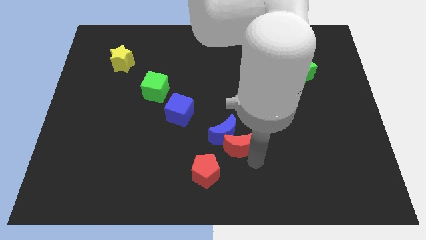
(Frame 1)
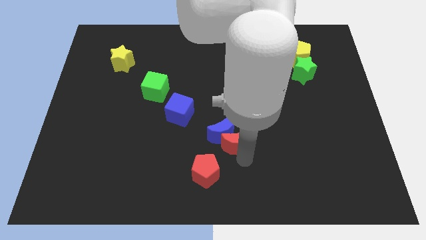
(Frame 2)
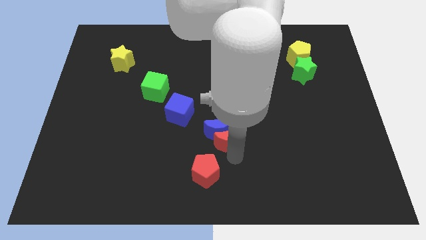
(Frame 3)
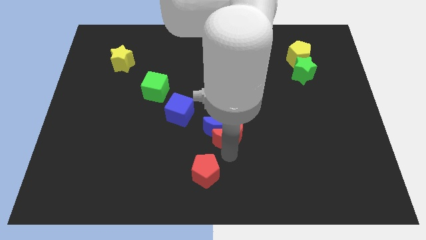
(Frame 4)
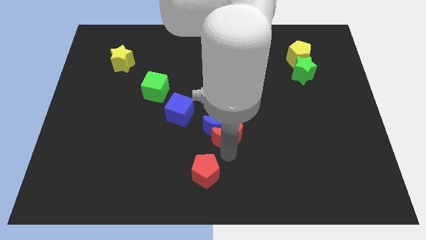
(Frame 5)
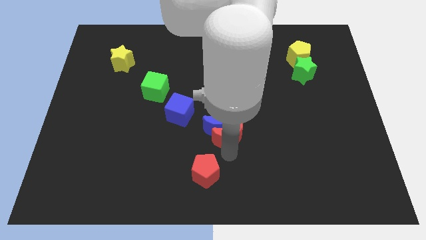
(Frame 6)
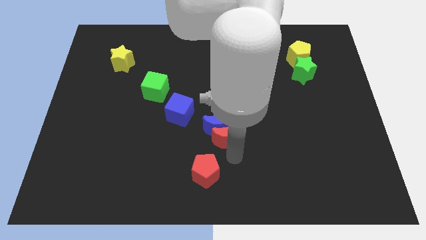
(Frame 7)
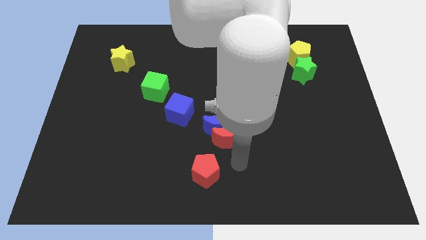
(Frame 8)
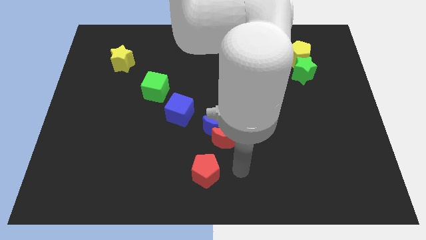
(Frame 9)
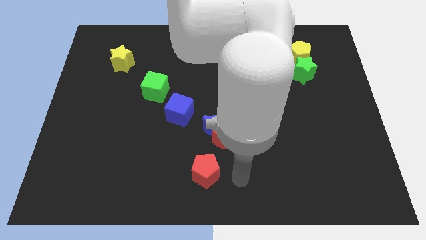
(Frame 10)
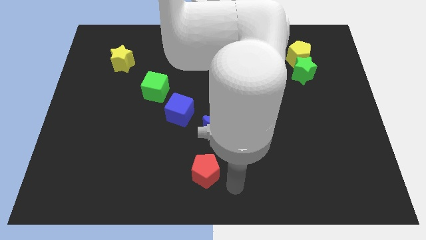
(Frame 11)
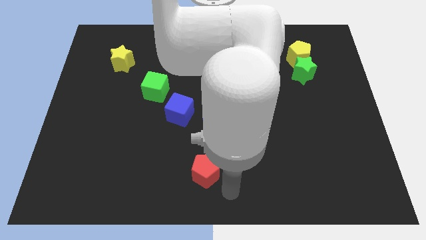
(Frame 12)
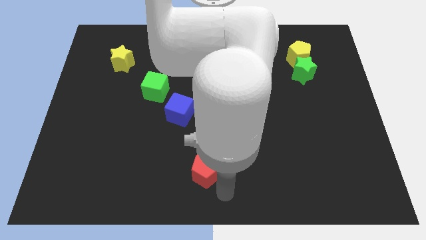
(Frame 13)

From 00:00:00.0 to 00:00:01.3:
move the arm away from the red crescent

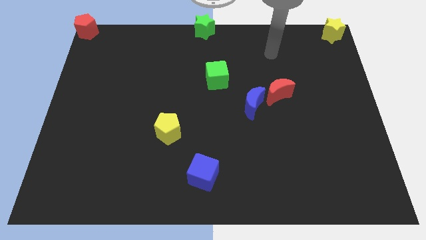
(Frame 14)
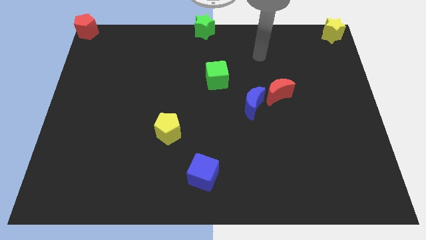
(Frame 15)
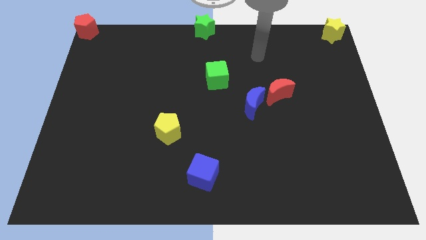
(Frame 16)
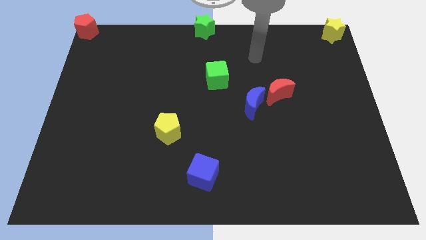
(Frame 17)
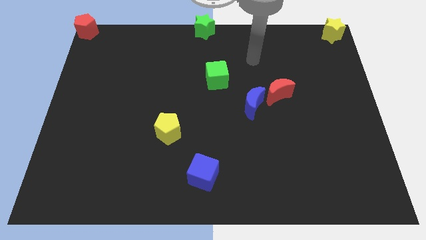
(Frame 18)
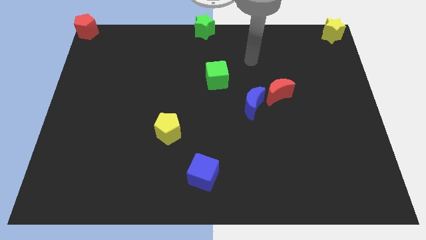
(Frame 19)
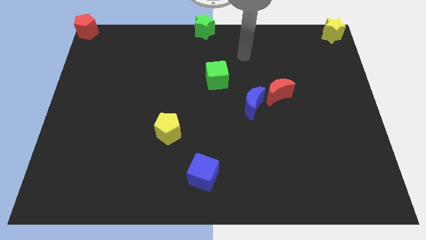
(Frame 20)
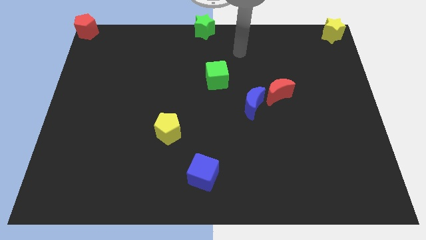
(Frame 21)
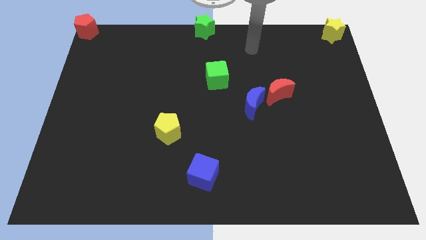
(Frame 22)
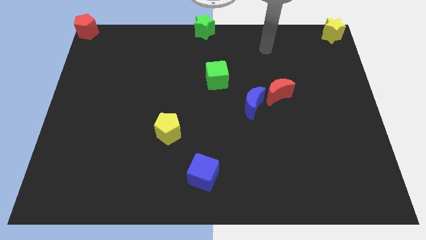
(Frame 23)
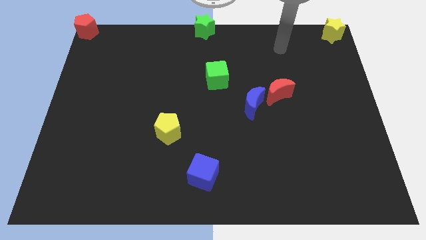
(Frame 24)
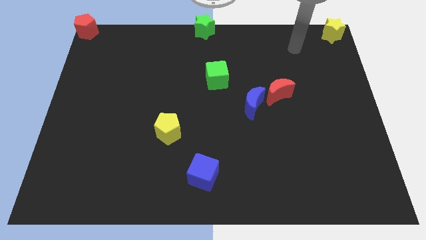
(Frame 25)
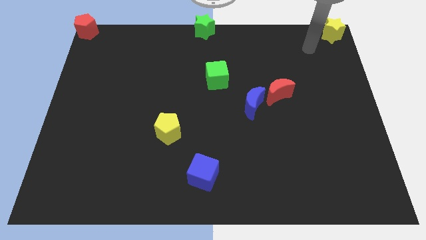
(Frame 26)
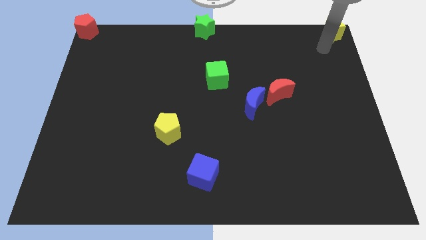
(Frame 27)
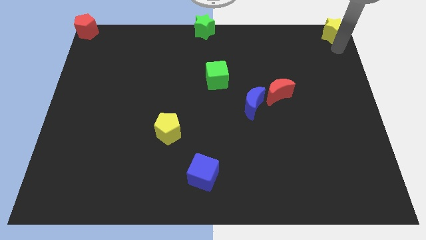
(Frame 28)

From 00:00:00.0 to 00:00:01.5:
point your arm at the bottom side of the yellow star

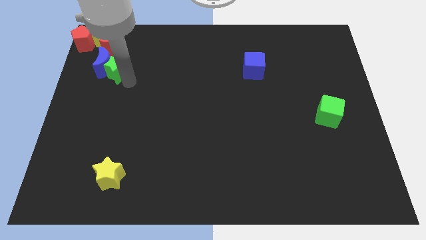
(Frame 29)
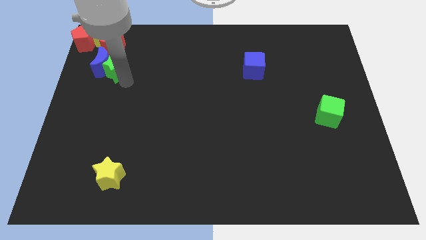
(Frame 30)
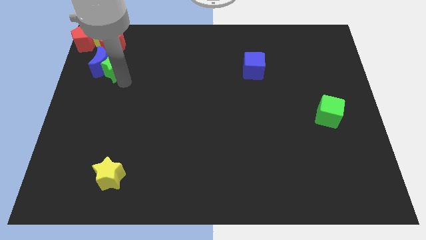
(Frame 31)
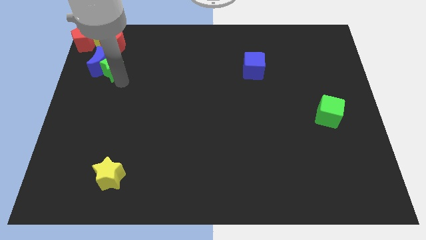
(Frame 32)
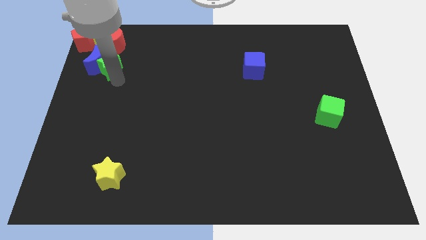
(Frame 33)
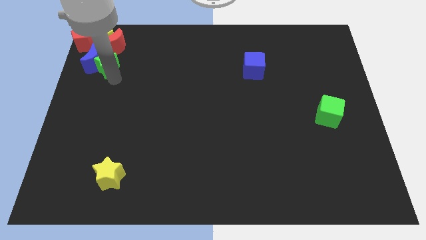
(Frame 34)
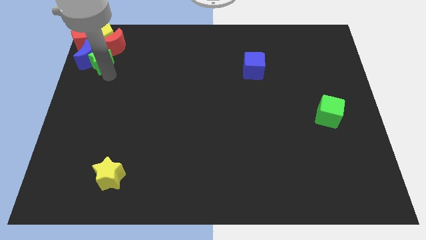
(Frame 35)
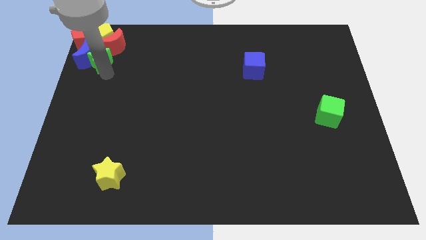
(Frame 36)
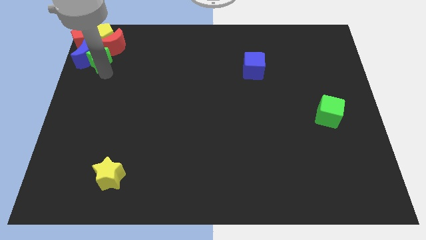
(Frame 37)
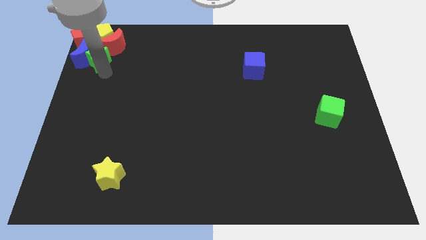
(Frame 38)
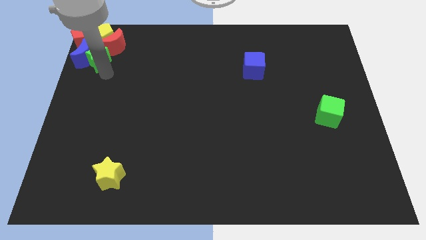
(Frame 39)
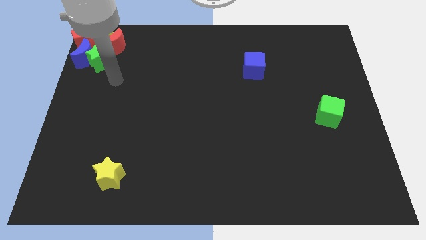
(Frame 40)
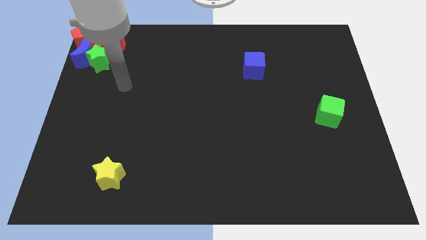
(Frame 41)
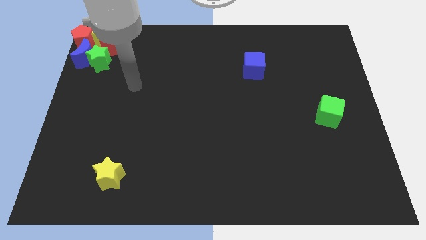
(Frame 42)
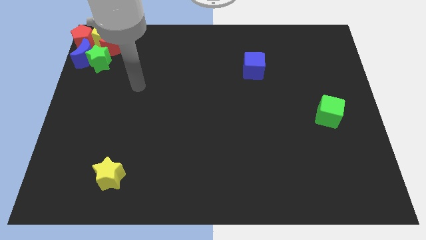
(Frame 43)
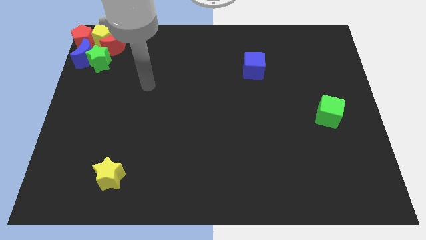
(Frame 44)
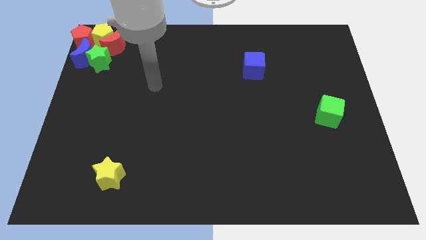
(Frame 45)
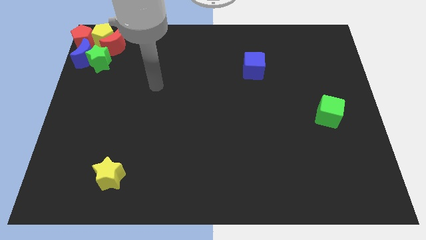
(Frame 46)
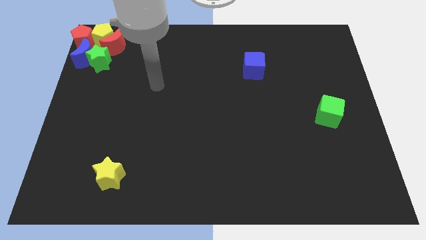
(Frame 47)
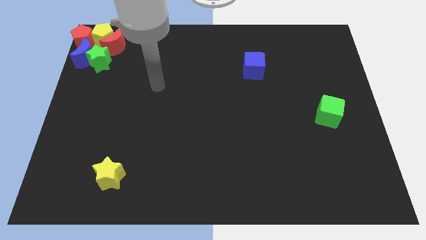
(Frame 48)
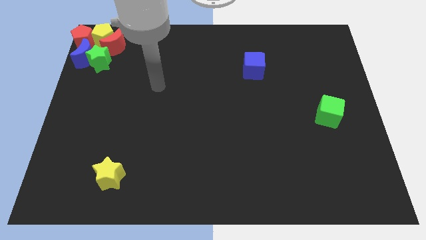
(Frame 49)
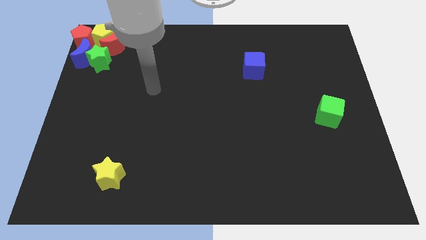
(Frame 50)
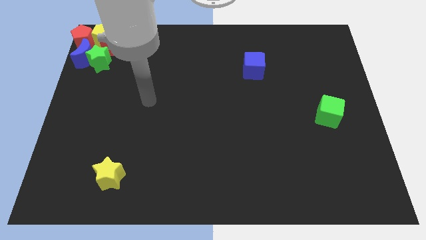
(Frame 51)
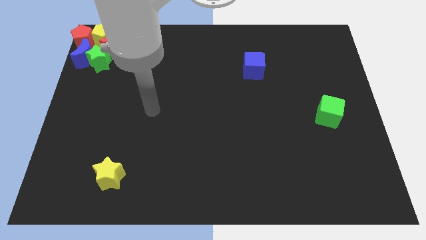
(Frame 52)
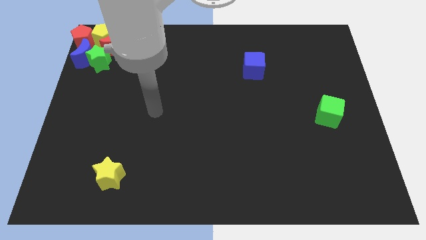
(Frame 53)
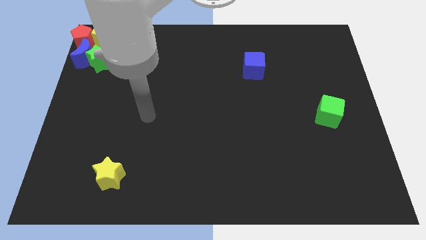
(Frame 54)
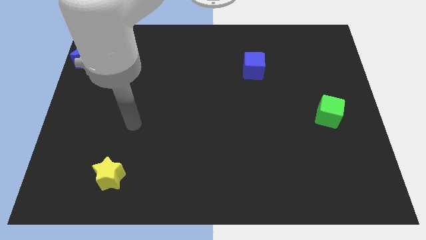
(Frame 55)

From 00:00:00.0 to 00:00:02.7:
push the blue moon and green star into a group of blocks

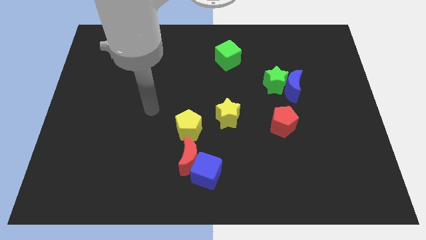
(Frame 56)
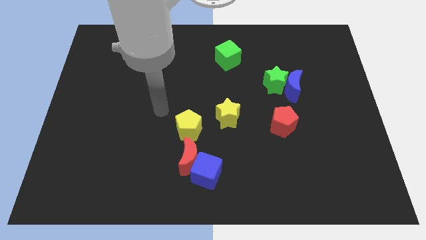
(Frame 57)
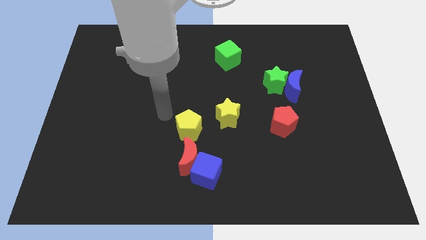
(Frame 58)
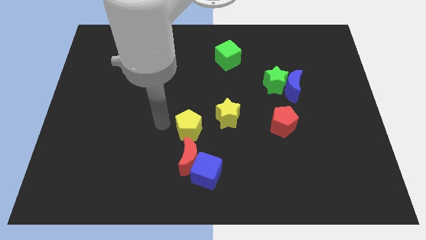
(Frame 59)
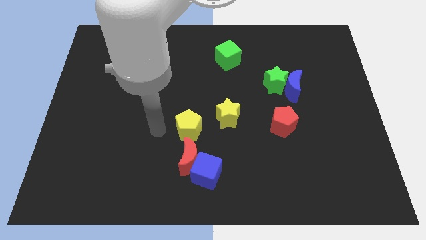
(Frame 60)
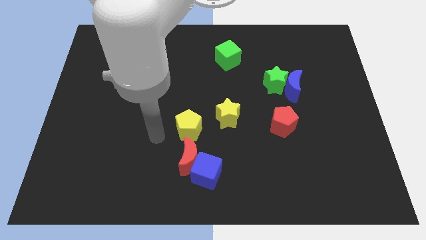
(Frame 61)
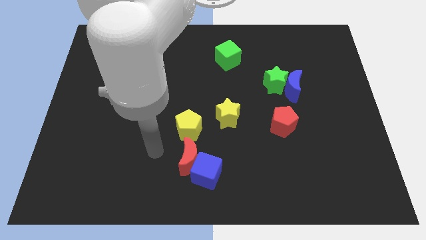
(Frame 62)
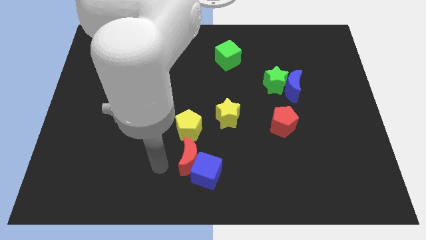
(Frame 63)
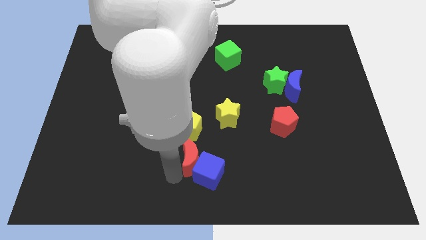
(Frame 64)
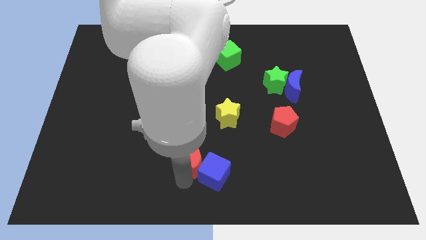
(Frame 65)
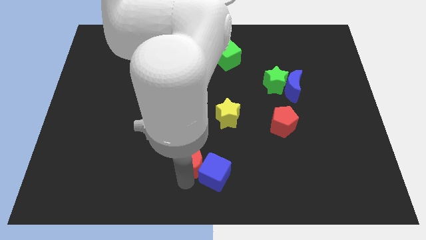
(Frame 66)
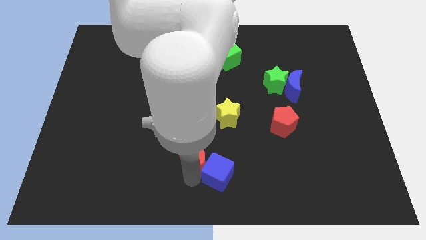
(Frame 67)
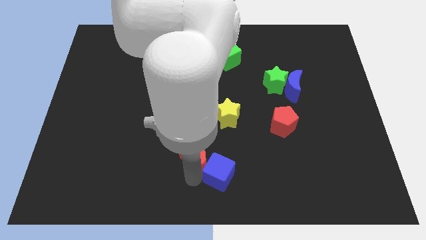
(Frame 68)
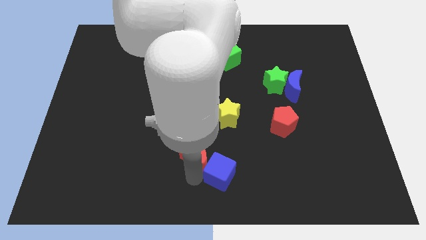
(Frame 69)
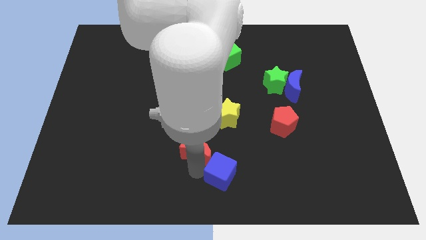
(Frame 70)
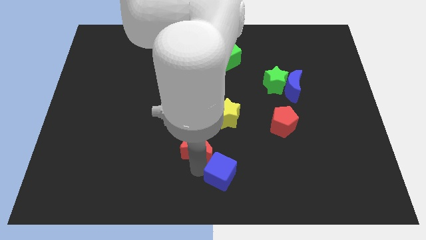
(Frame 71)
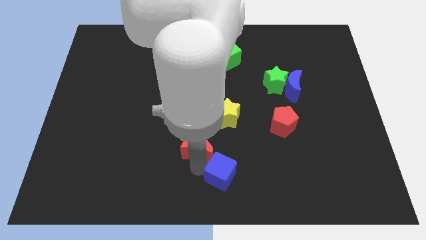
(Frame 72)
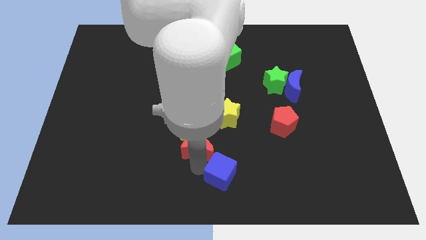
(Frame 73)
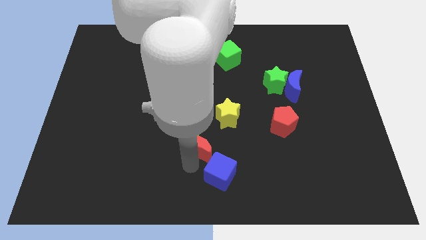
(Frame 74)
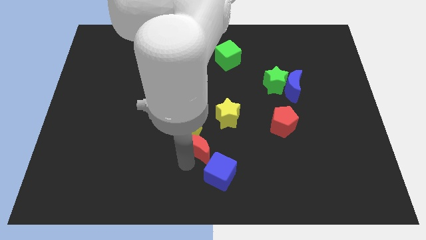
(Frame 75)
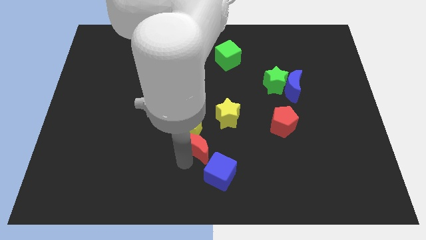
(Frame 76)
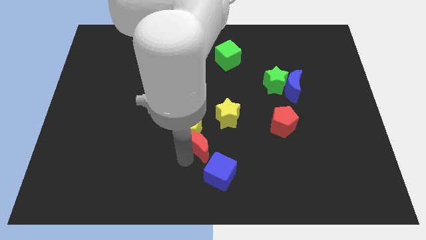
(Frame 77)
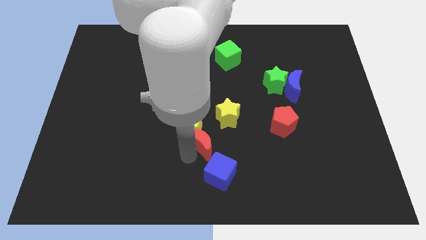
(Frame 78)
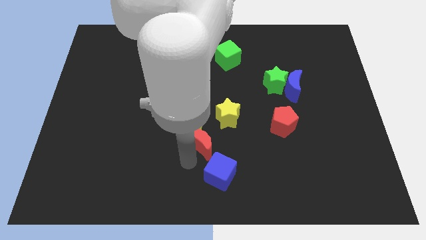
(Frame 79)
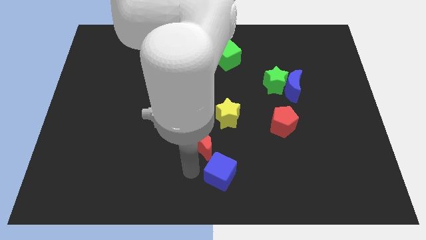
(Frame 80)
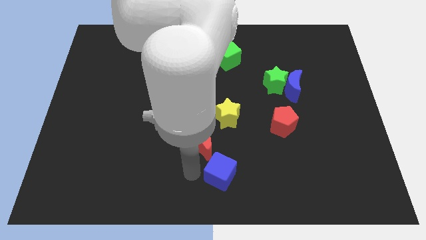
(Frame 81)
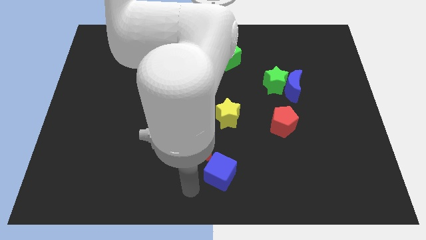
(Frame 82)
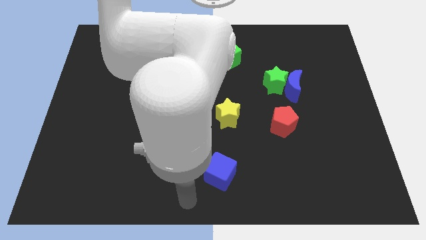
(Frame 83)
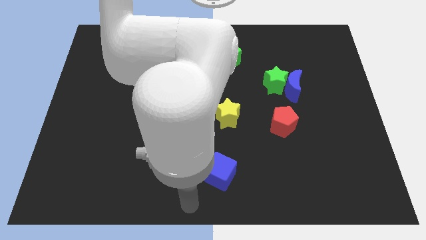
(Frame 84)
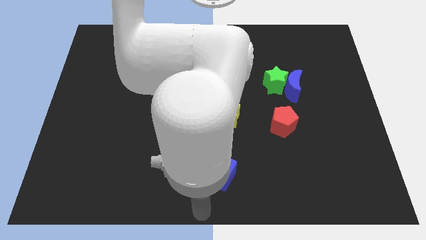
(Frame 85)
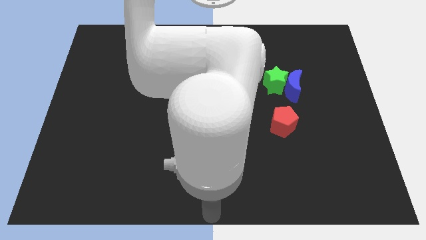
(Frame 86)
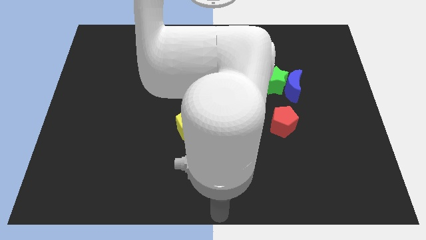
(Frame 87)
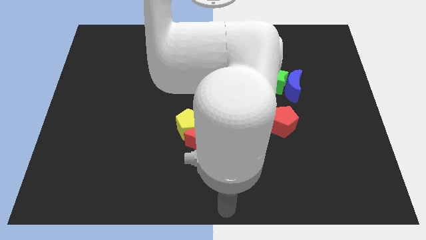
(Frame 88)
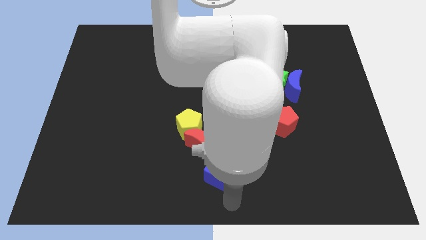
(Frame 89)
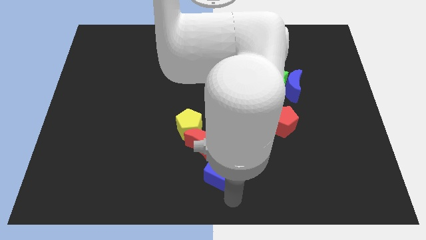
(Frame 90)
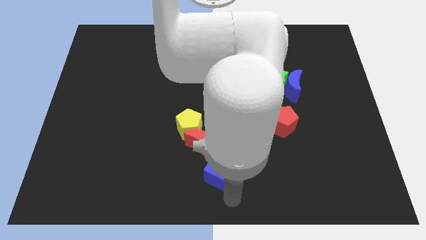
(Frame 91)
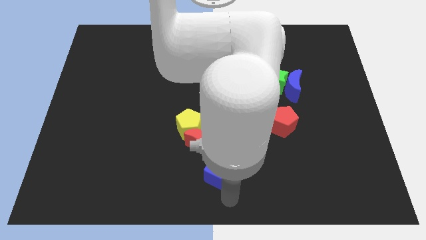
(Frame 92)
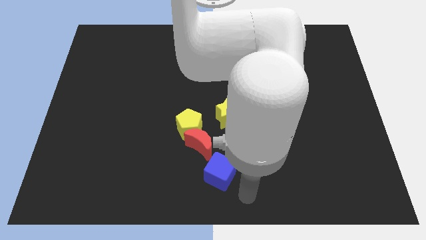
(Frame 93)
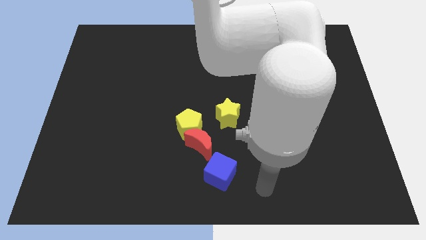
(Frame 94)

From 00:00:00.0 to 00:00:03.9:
move the red crescent in between the yellow pentagon and blue cube
